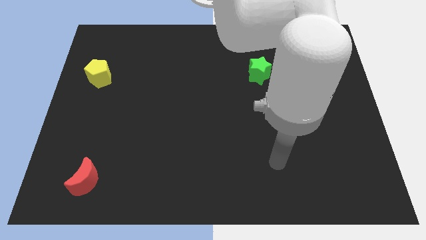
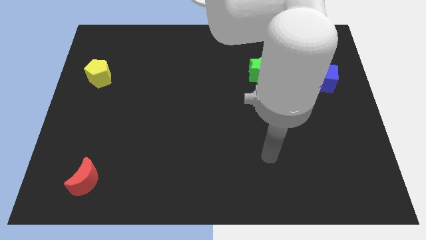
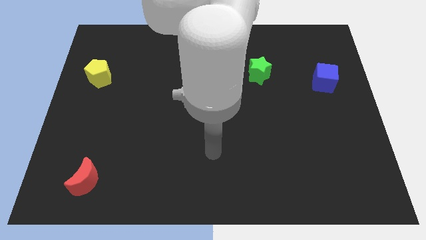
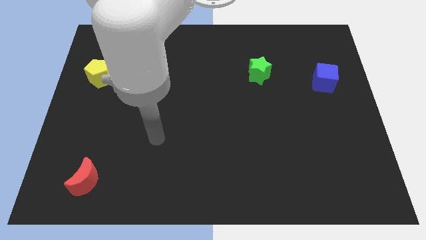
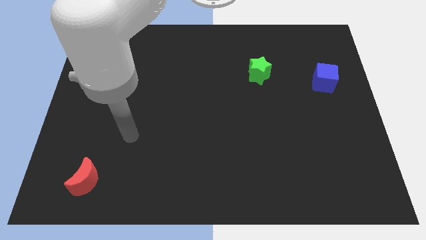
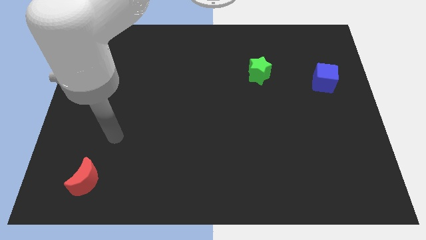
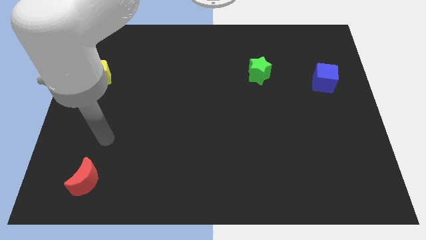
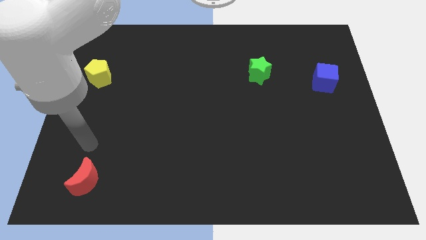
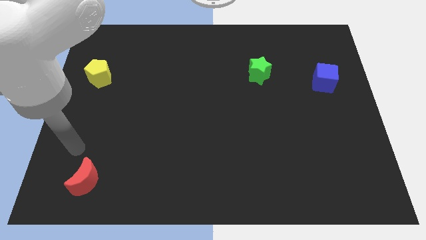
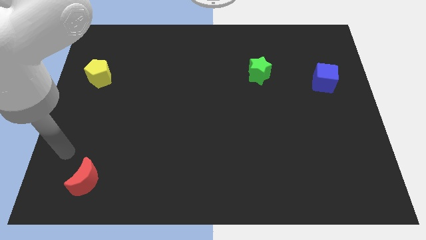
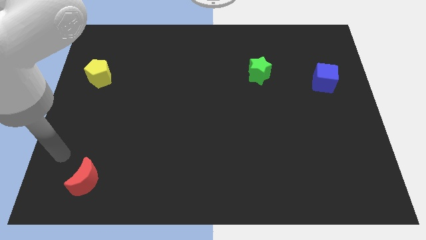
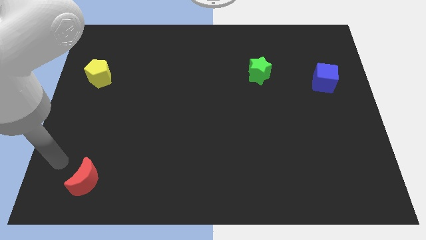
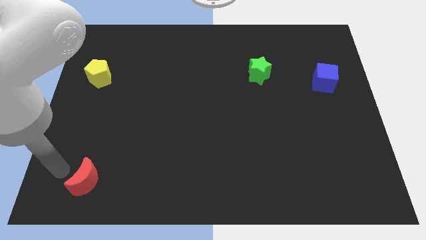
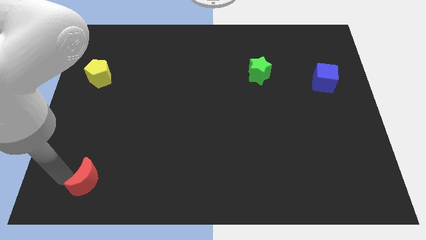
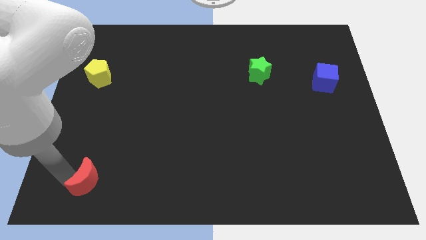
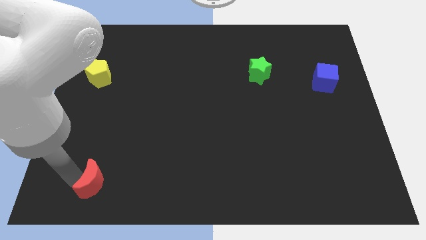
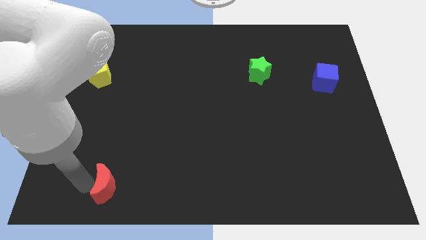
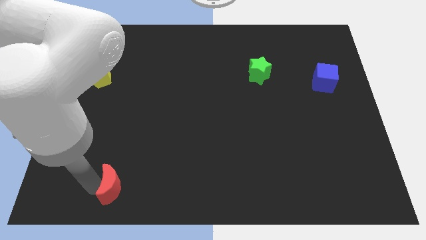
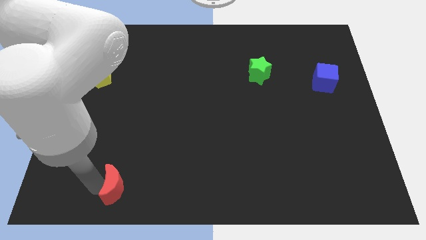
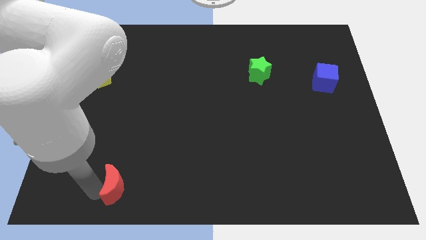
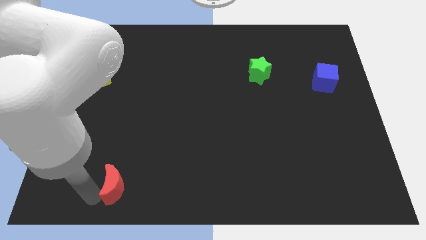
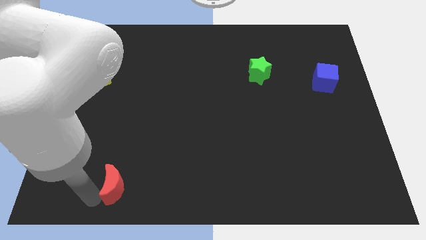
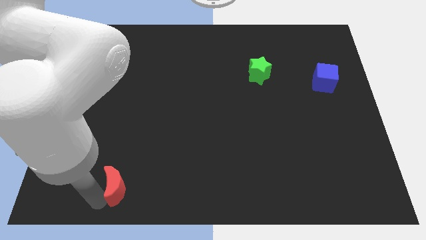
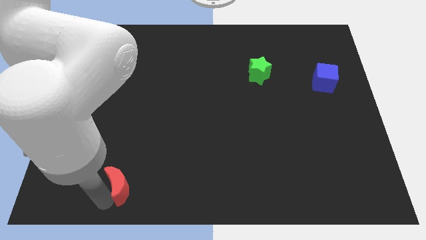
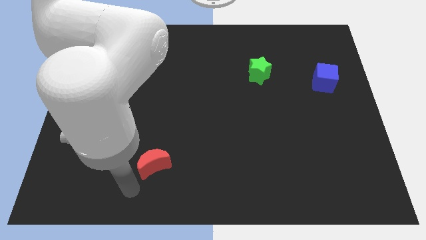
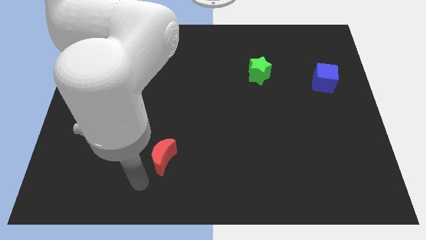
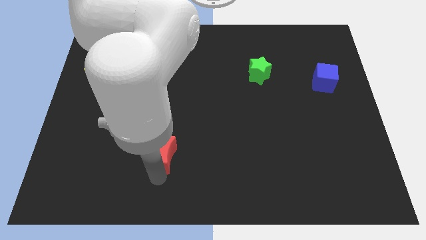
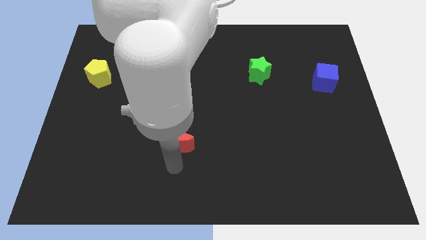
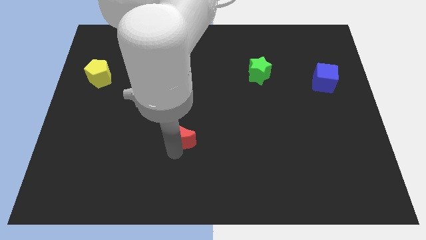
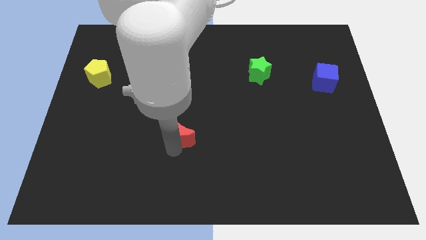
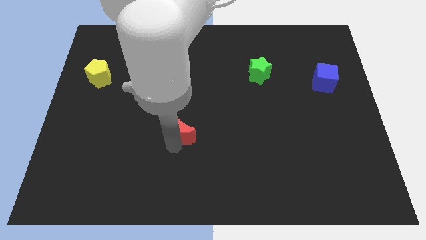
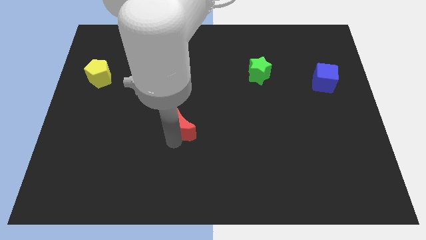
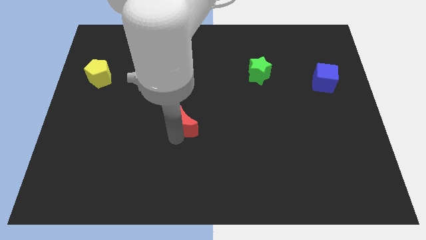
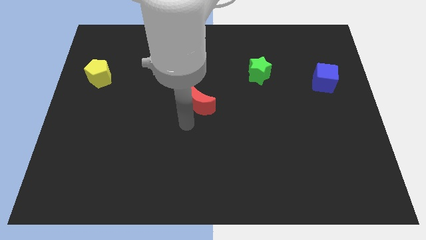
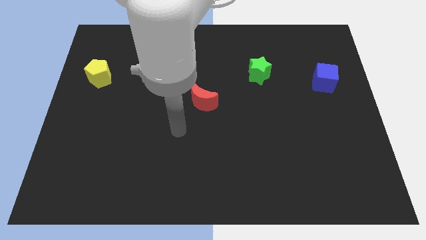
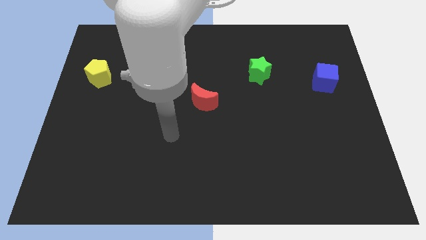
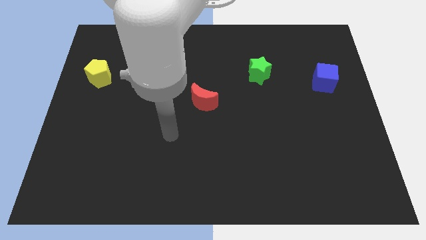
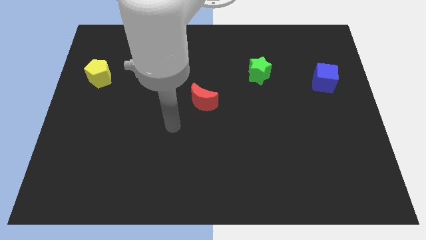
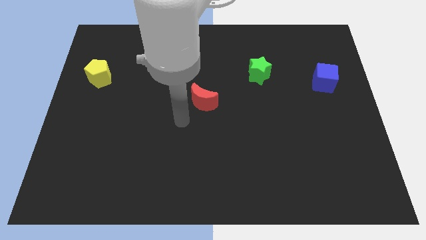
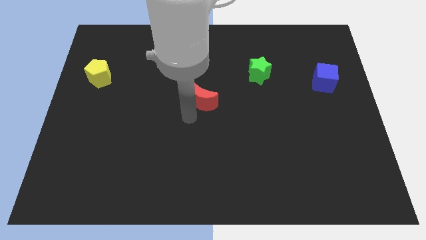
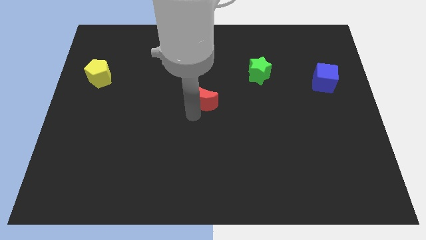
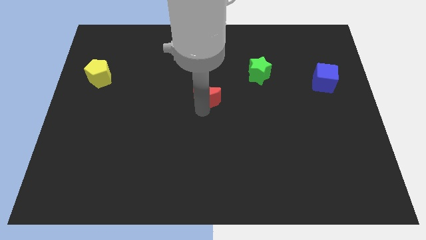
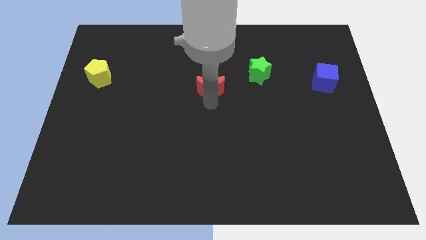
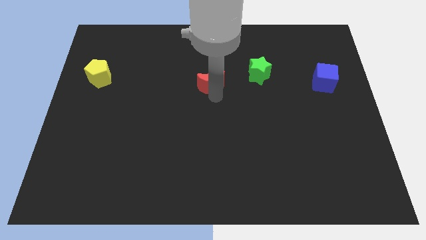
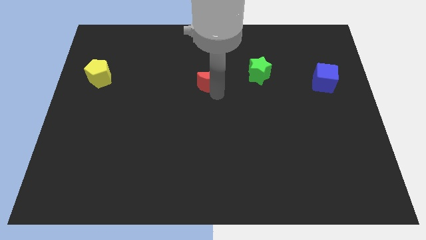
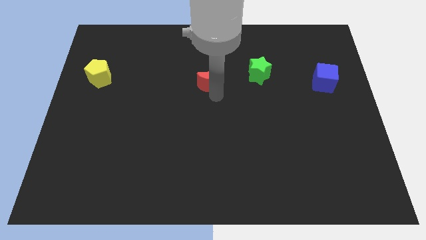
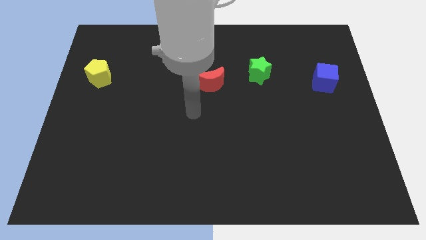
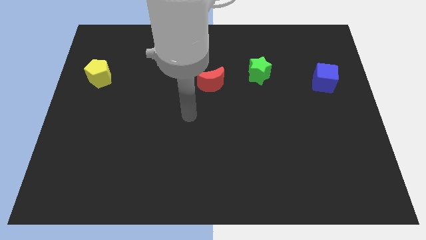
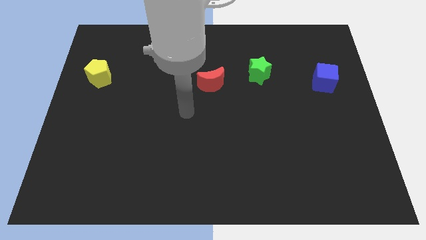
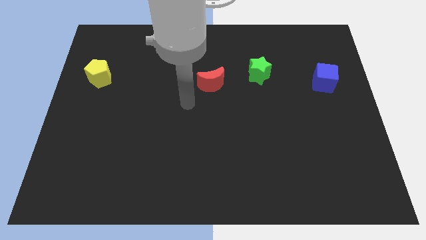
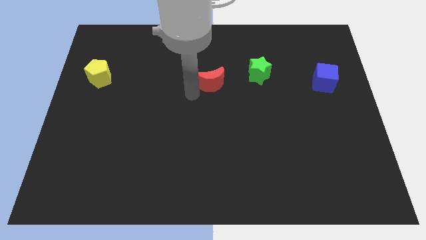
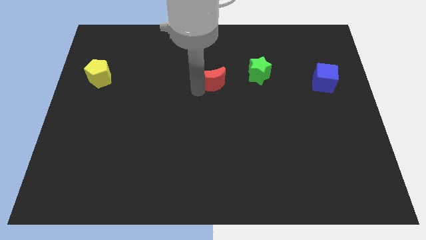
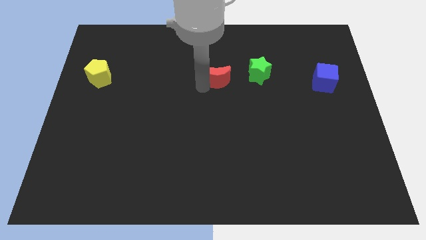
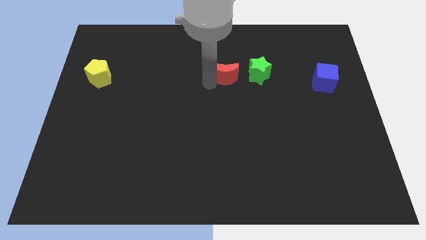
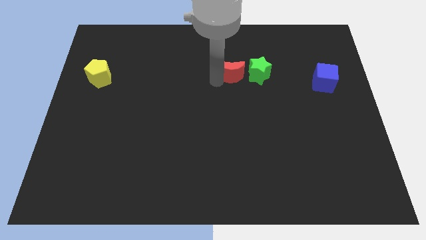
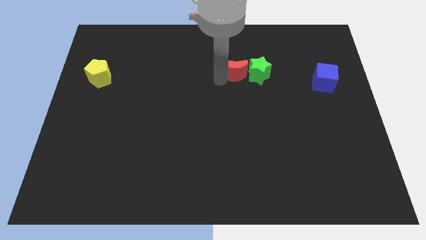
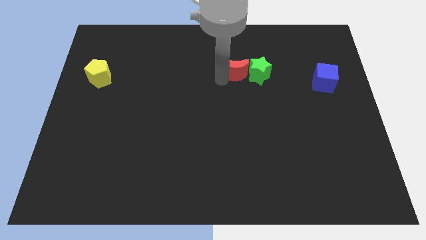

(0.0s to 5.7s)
put the red moon next to the green star

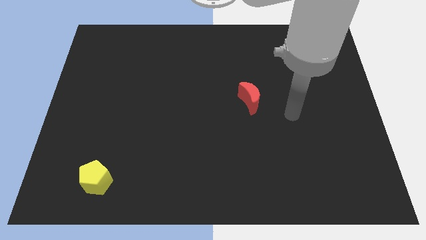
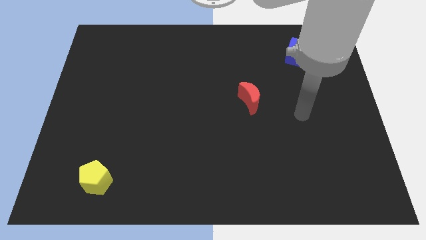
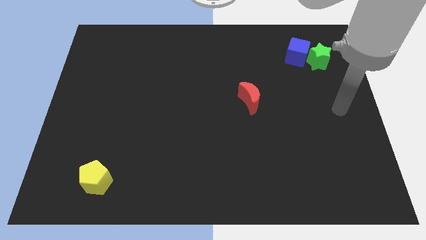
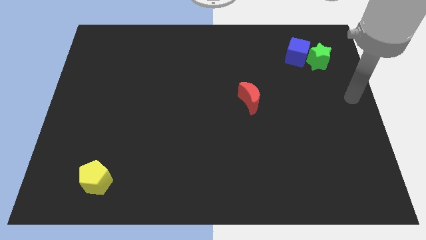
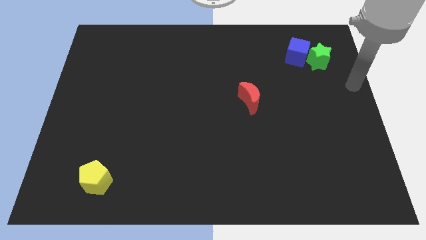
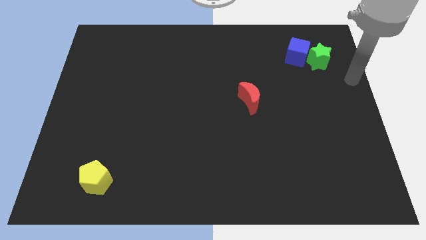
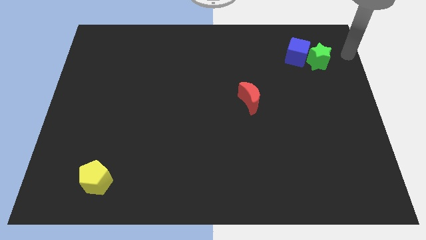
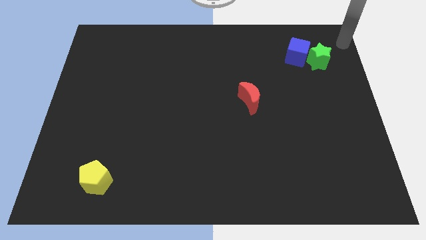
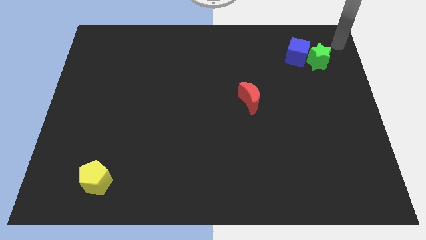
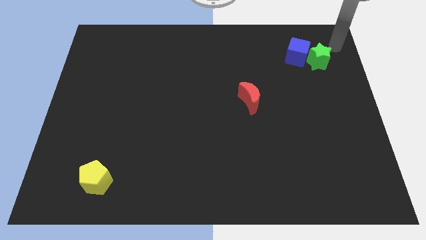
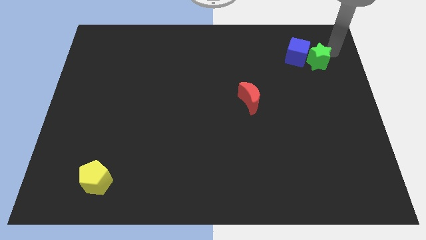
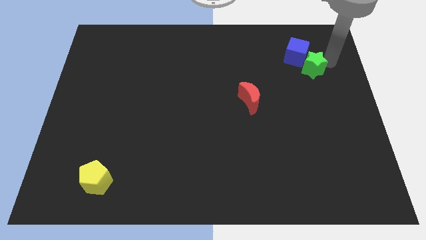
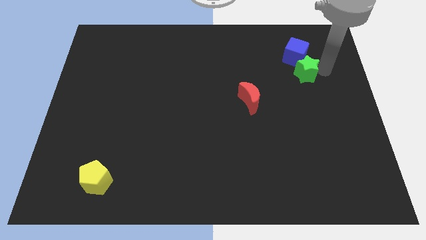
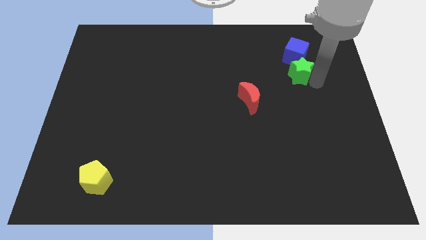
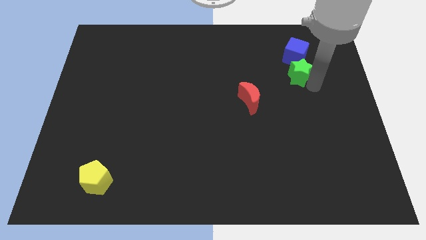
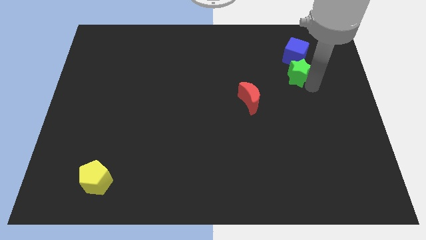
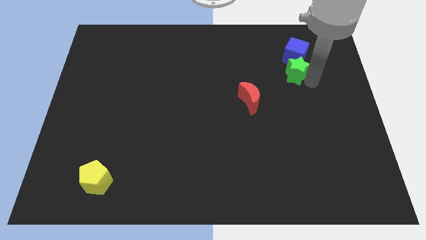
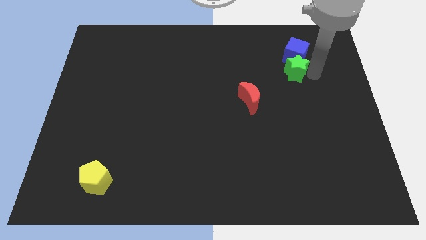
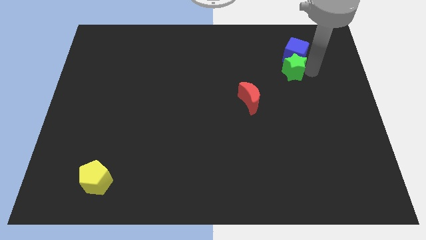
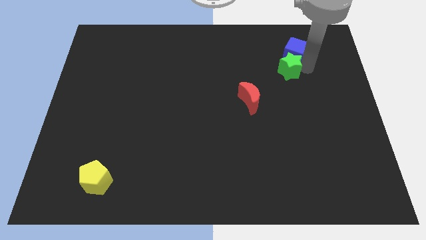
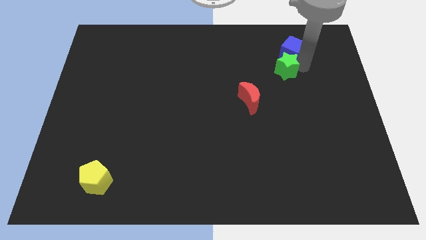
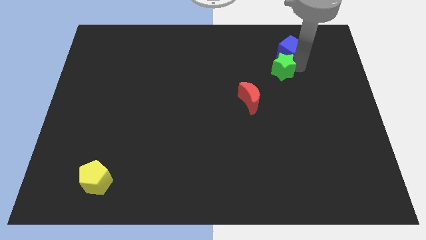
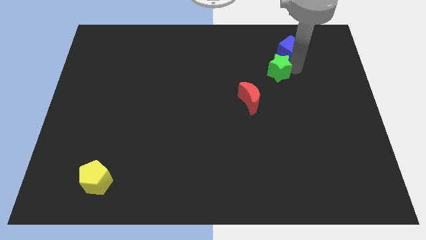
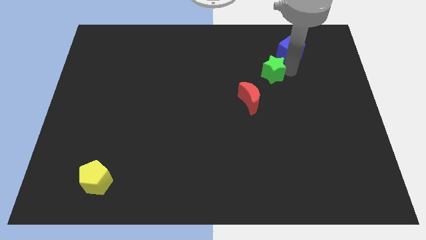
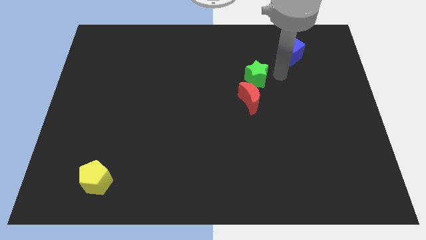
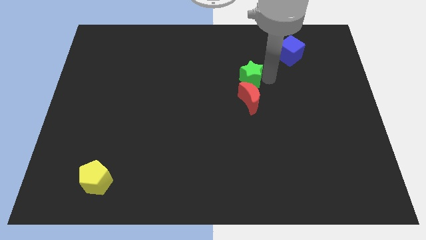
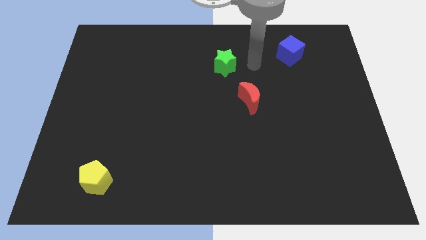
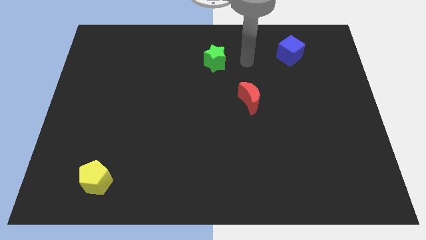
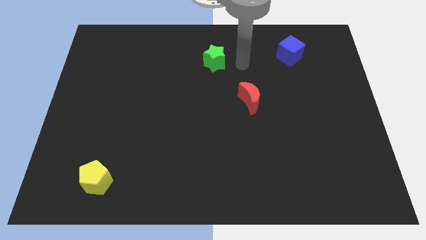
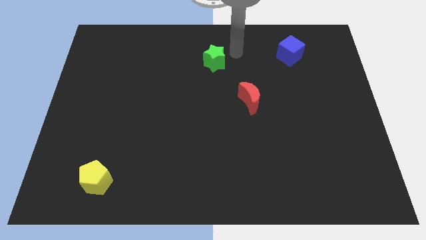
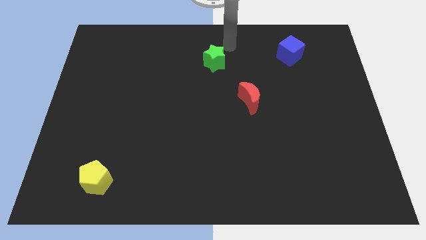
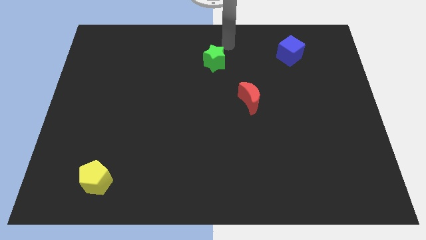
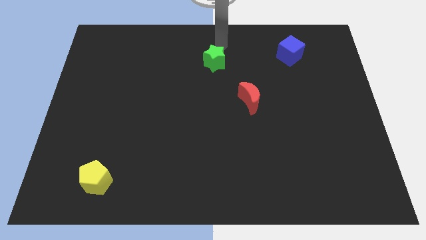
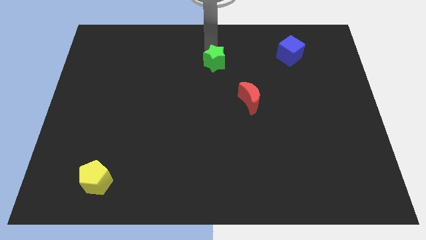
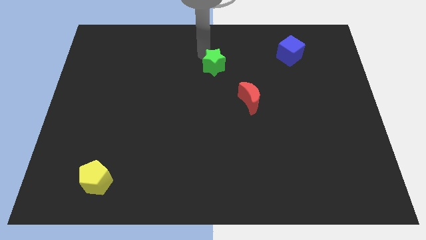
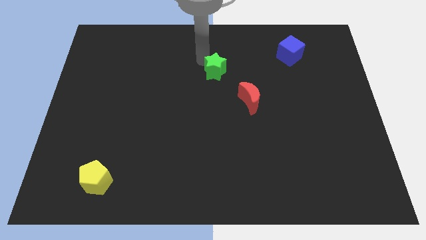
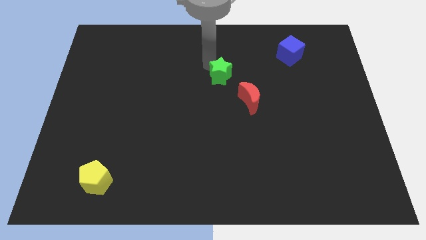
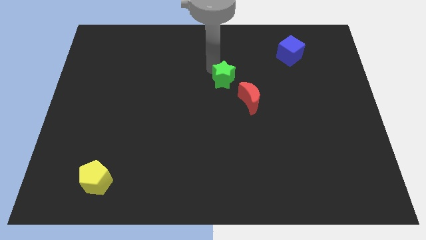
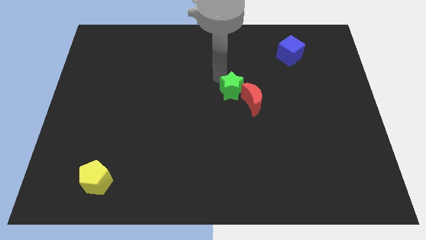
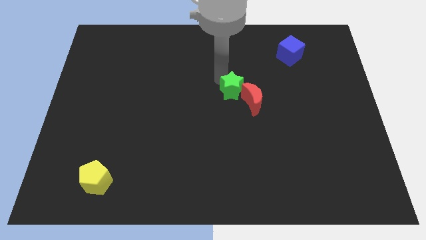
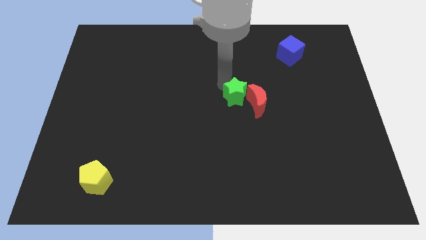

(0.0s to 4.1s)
move the green star next to the moon
